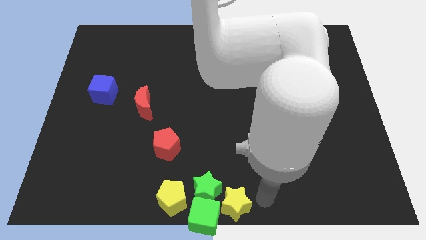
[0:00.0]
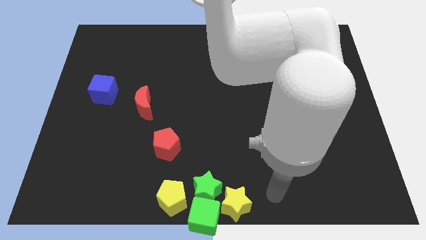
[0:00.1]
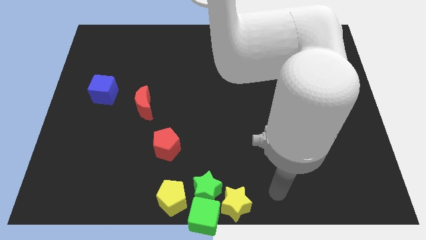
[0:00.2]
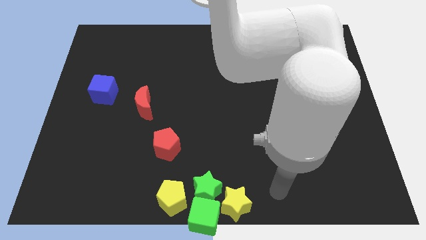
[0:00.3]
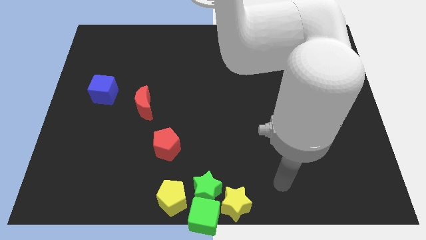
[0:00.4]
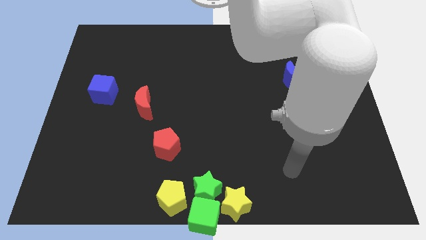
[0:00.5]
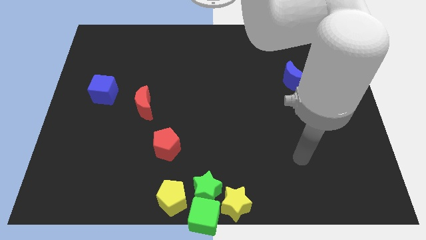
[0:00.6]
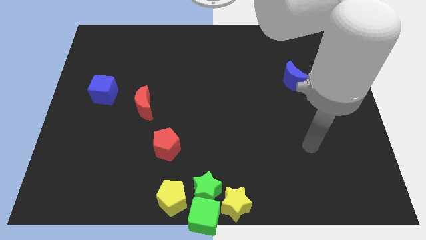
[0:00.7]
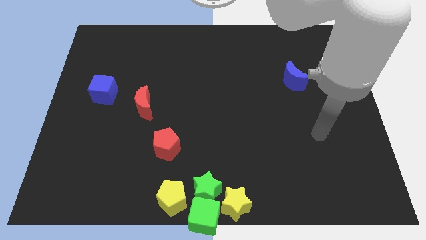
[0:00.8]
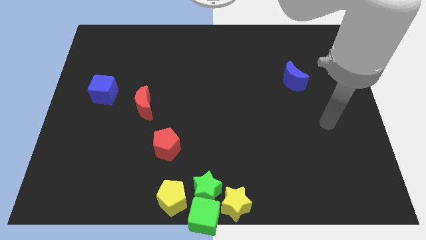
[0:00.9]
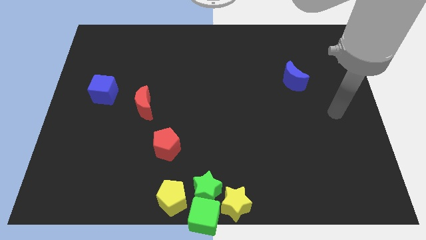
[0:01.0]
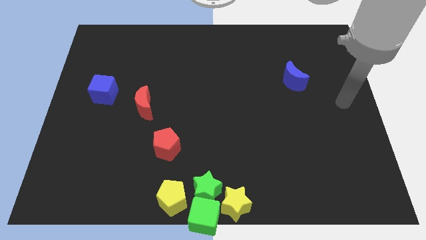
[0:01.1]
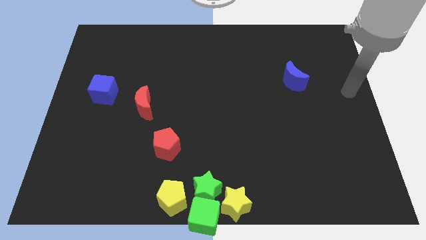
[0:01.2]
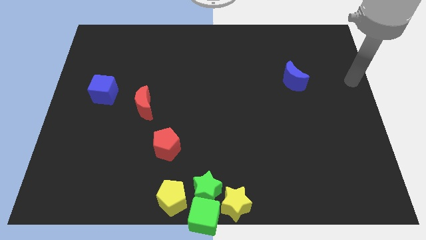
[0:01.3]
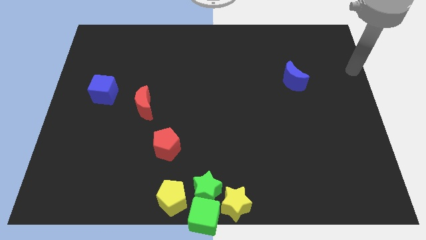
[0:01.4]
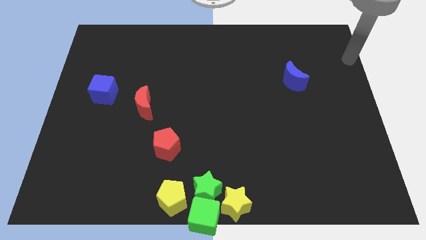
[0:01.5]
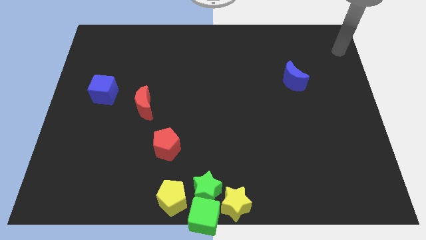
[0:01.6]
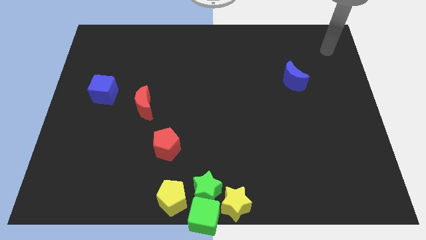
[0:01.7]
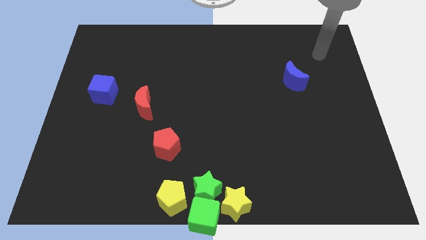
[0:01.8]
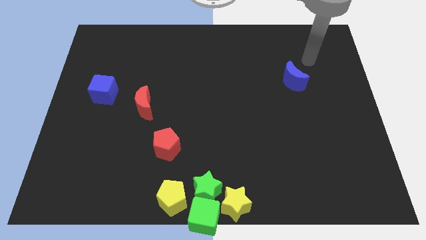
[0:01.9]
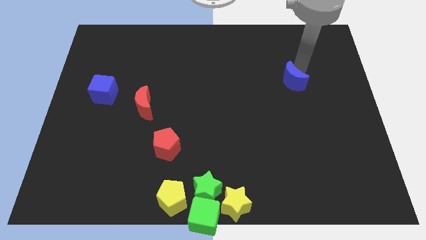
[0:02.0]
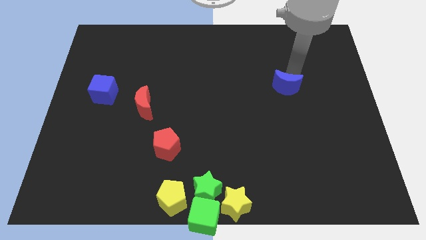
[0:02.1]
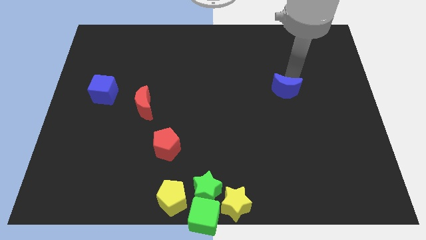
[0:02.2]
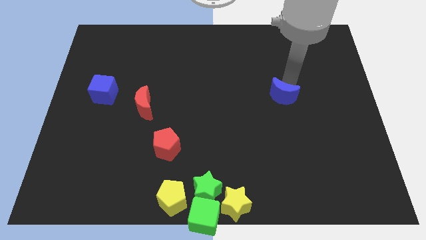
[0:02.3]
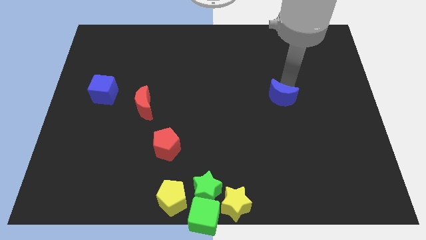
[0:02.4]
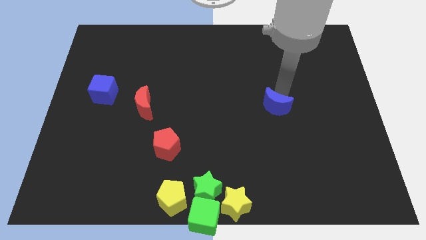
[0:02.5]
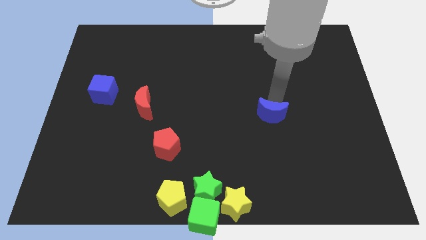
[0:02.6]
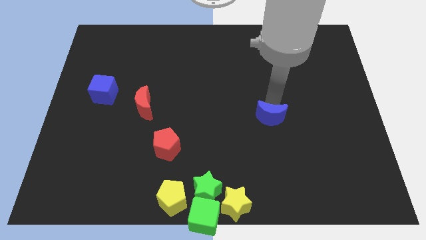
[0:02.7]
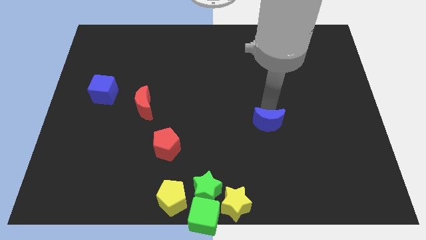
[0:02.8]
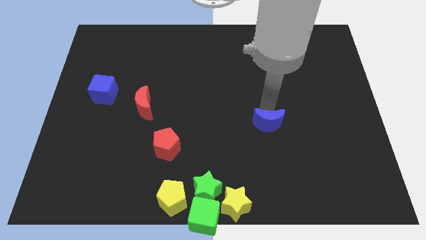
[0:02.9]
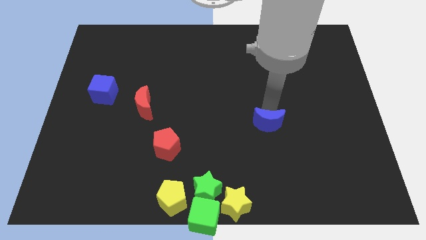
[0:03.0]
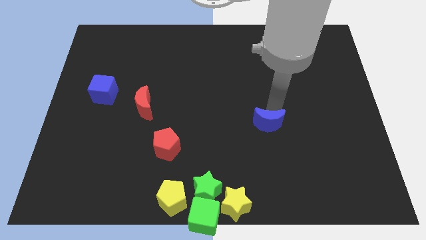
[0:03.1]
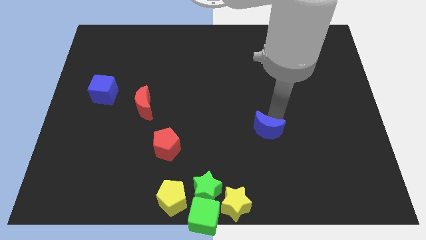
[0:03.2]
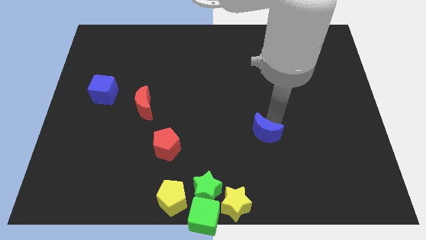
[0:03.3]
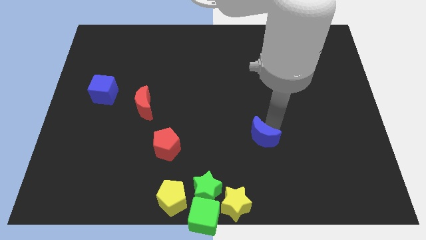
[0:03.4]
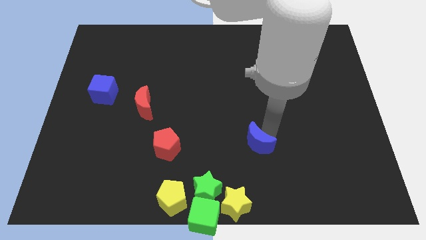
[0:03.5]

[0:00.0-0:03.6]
place the blue moon diagonally top right to the yellow star

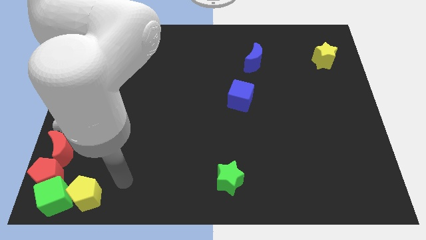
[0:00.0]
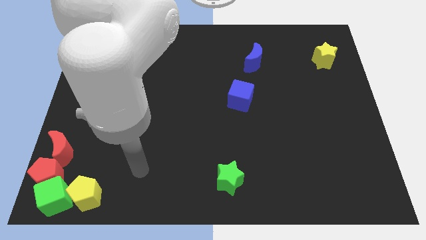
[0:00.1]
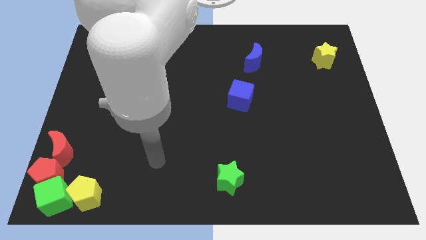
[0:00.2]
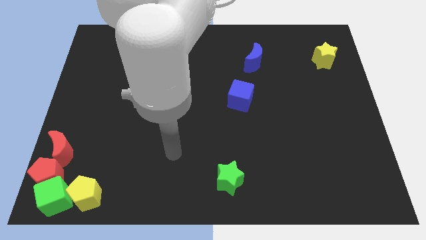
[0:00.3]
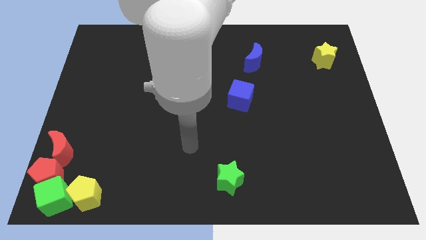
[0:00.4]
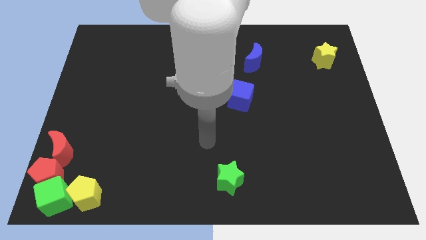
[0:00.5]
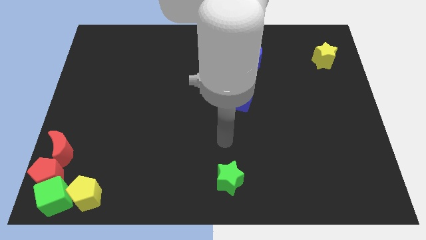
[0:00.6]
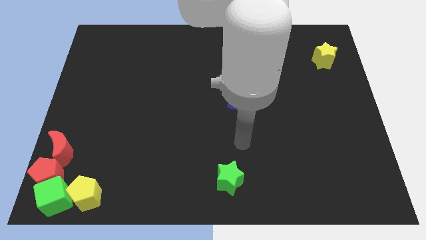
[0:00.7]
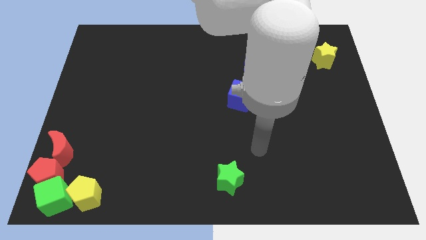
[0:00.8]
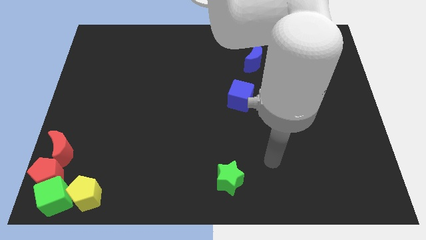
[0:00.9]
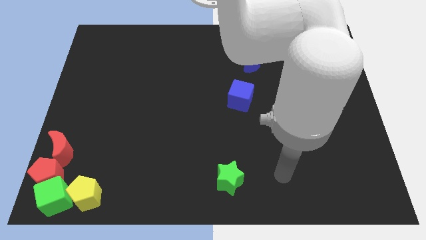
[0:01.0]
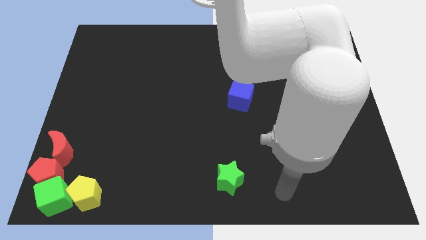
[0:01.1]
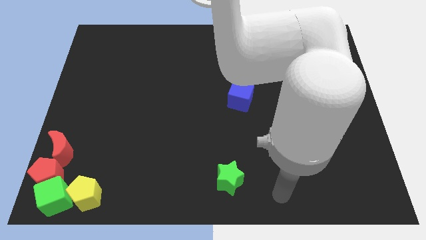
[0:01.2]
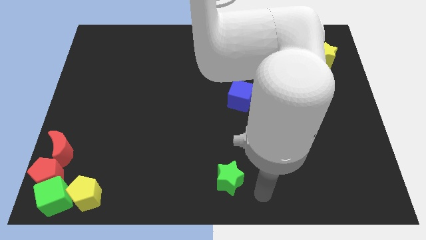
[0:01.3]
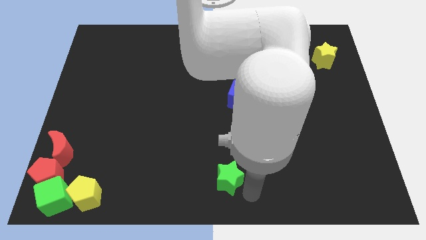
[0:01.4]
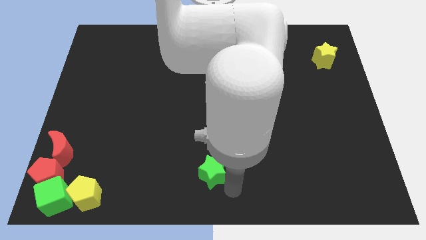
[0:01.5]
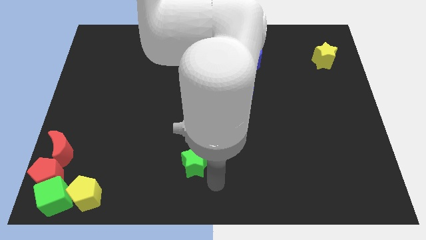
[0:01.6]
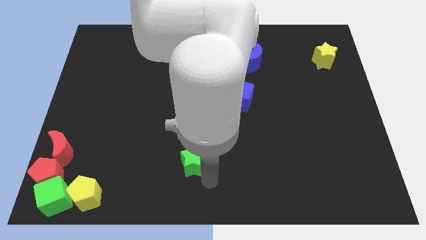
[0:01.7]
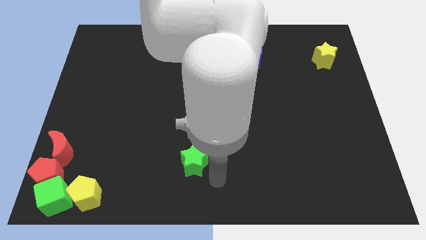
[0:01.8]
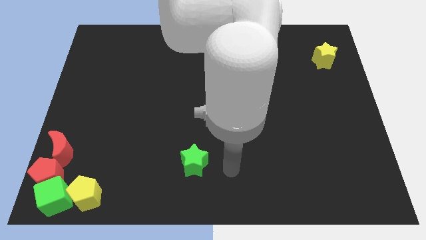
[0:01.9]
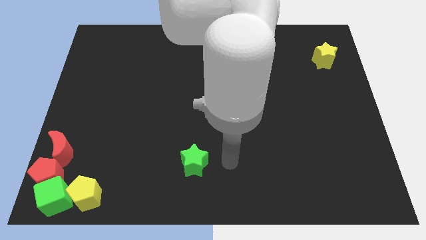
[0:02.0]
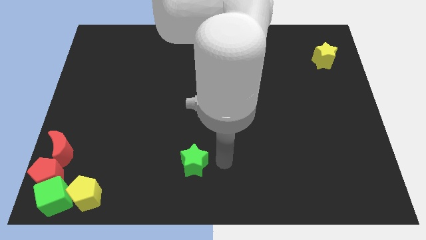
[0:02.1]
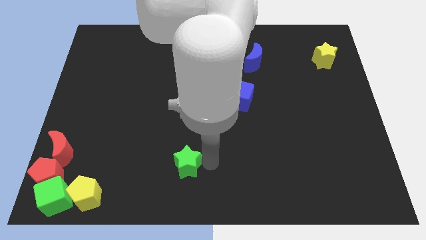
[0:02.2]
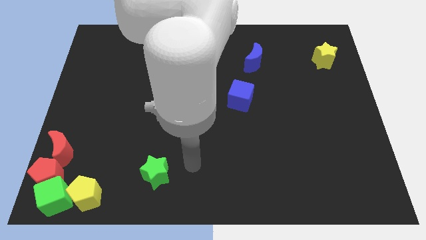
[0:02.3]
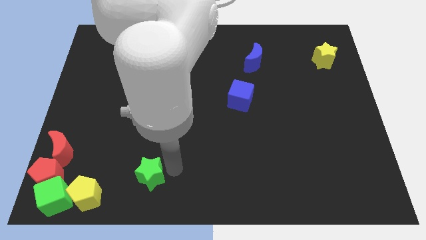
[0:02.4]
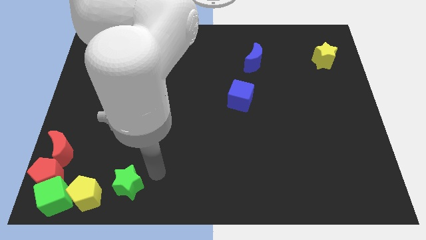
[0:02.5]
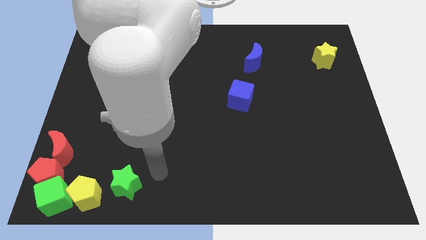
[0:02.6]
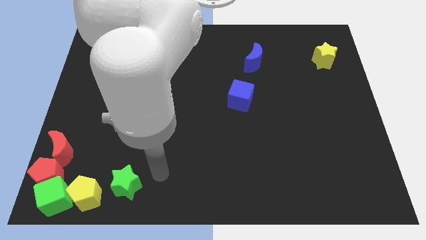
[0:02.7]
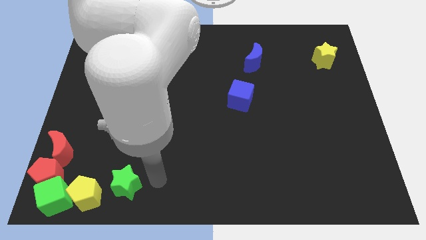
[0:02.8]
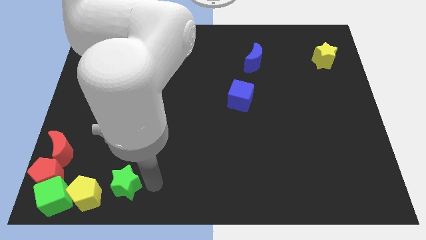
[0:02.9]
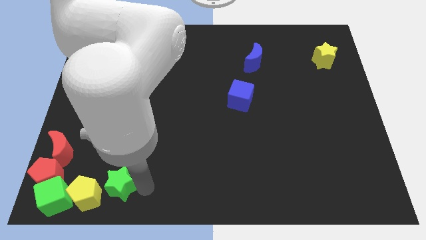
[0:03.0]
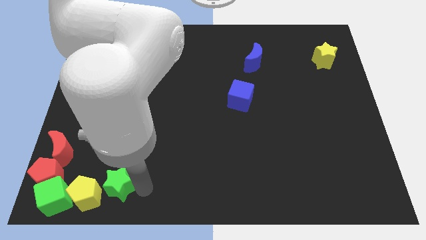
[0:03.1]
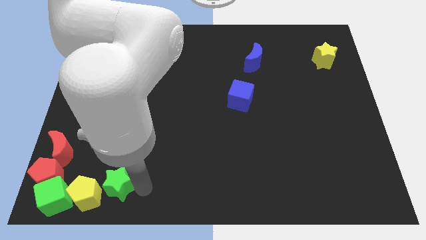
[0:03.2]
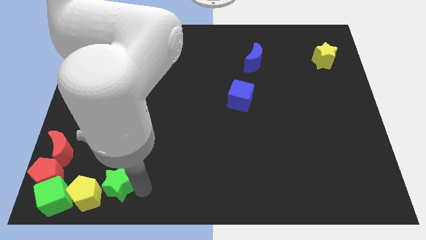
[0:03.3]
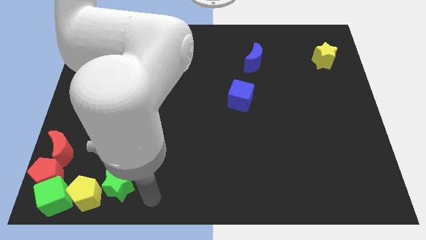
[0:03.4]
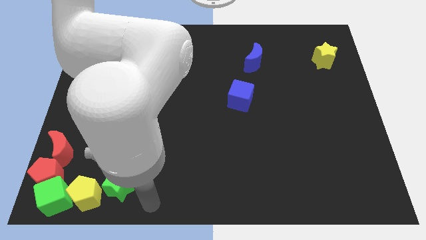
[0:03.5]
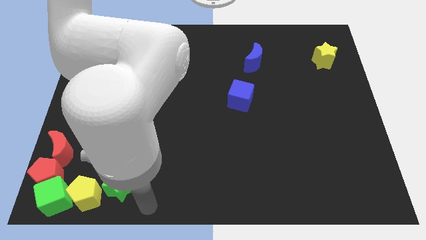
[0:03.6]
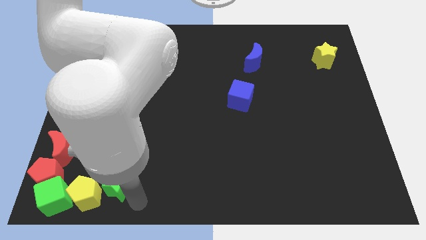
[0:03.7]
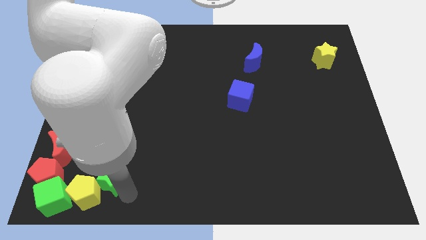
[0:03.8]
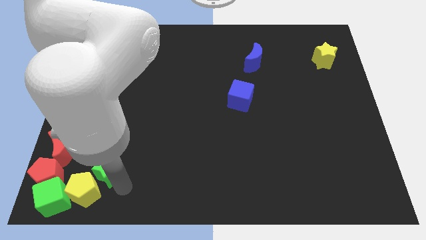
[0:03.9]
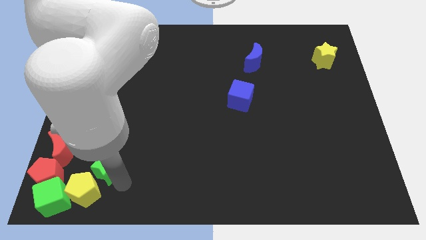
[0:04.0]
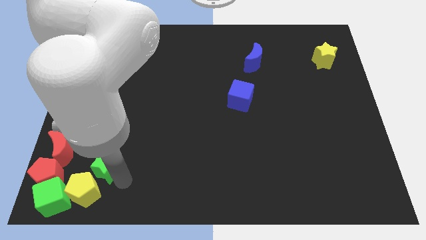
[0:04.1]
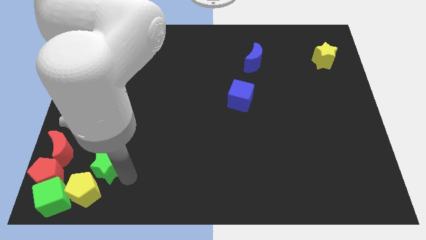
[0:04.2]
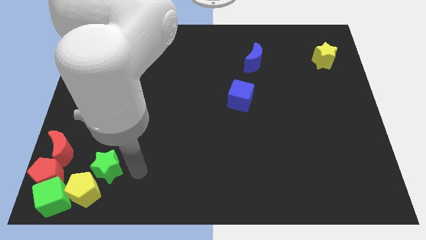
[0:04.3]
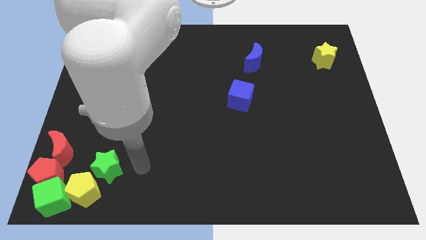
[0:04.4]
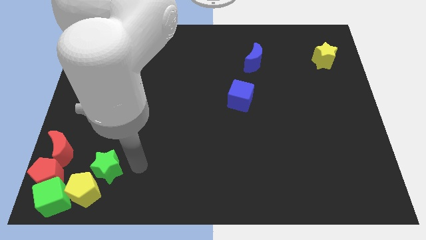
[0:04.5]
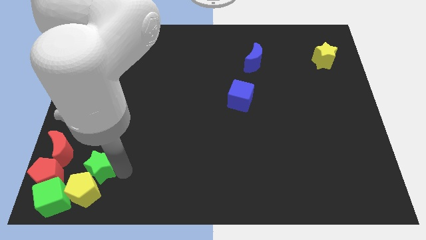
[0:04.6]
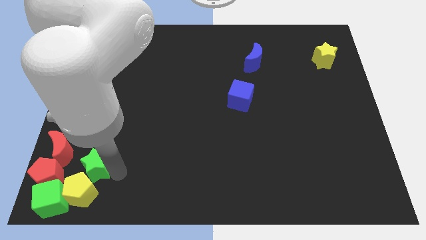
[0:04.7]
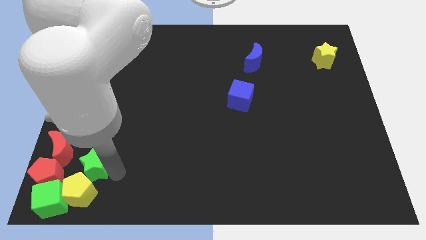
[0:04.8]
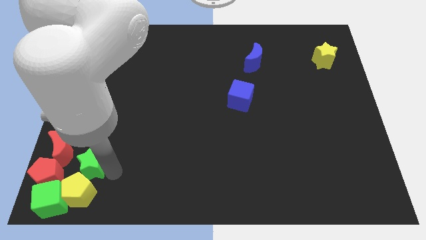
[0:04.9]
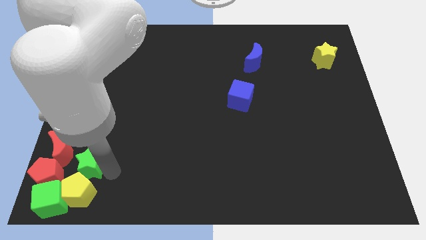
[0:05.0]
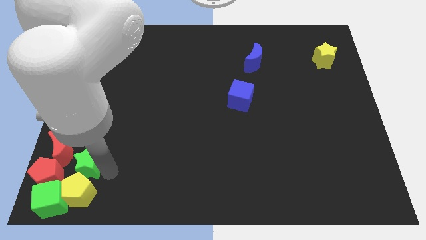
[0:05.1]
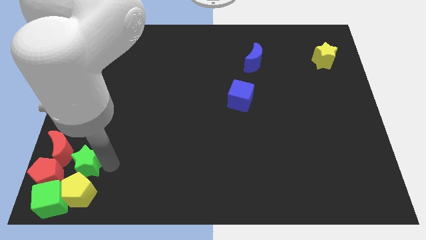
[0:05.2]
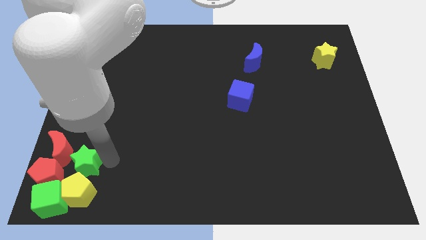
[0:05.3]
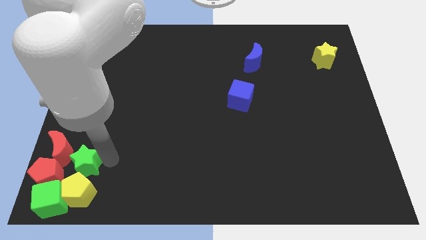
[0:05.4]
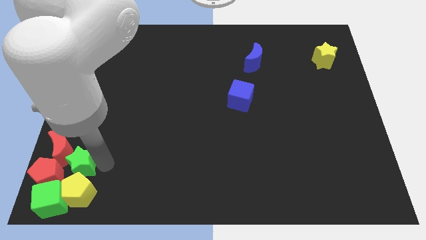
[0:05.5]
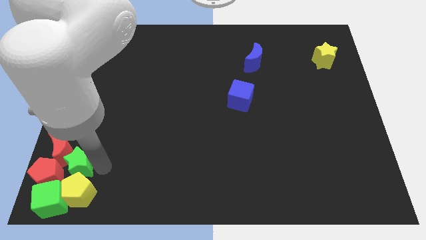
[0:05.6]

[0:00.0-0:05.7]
push the green star into the group of blocks
